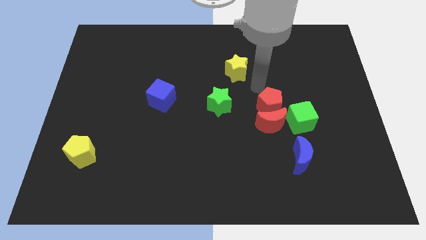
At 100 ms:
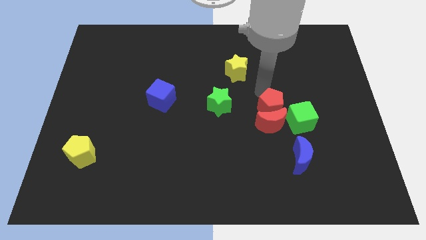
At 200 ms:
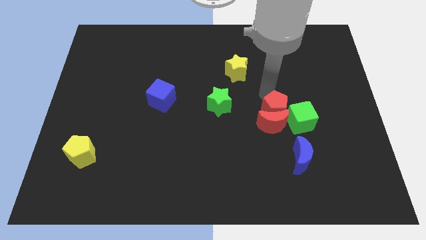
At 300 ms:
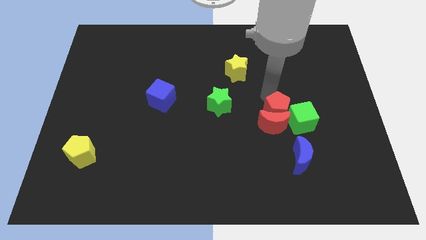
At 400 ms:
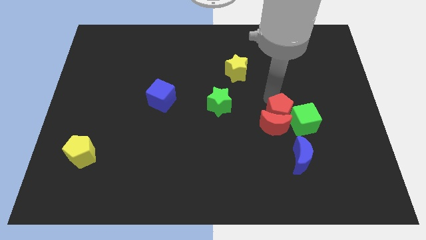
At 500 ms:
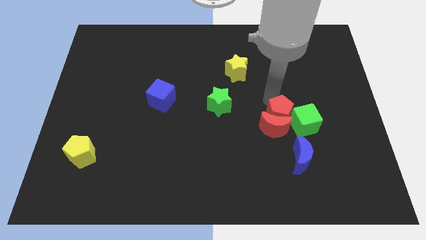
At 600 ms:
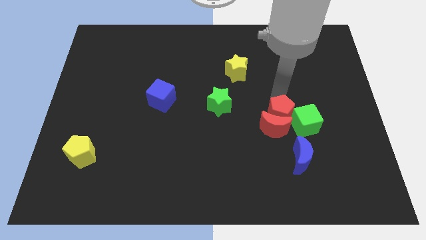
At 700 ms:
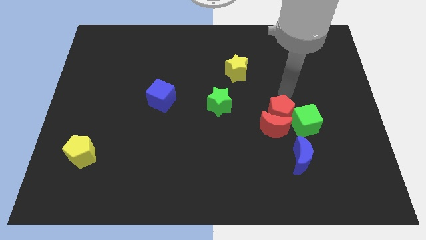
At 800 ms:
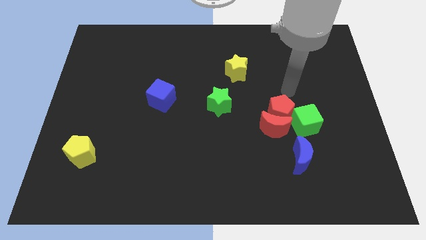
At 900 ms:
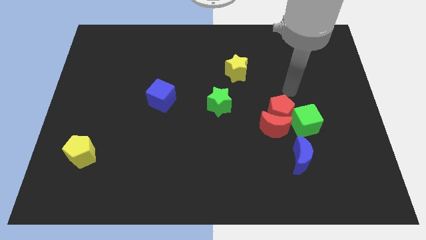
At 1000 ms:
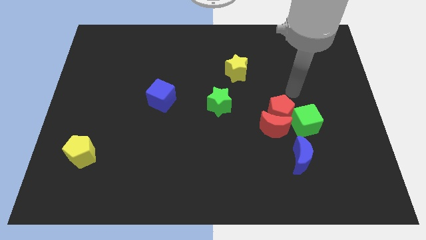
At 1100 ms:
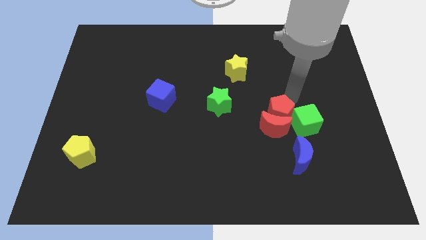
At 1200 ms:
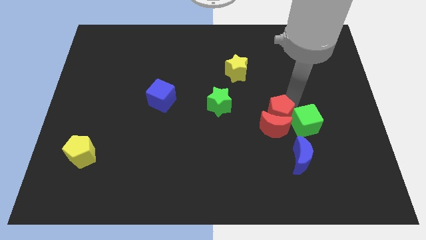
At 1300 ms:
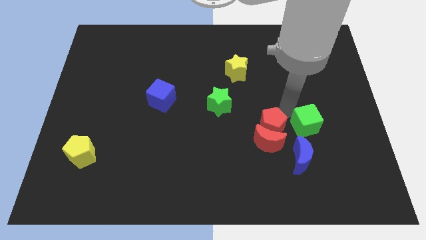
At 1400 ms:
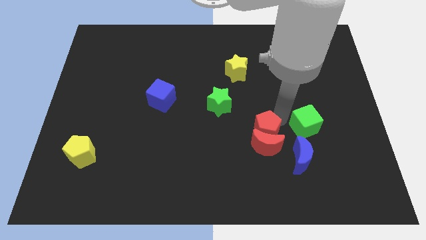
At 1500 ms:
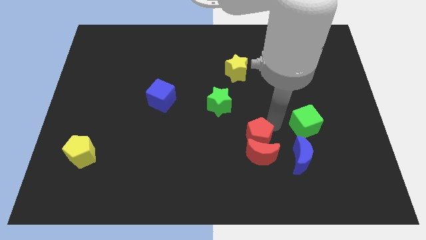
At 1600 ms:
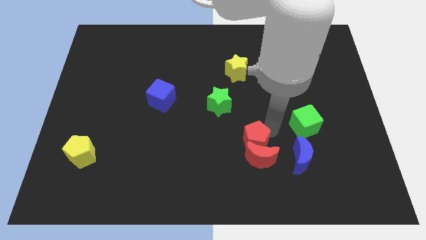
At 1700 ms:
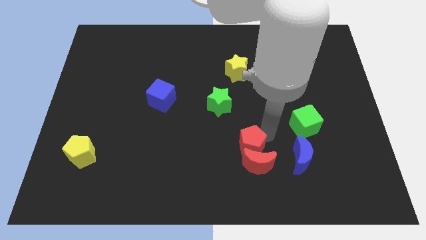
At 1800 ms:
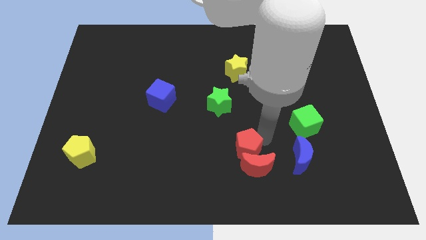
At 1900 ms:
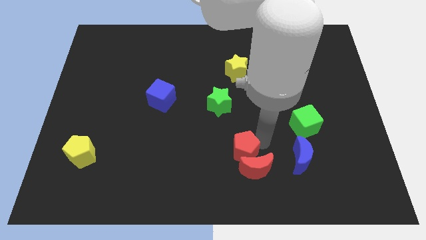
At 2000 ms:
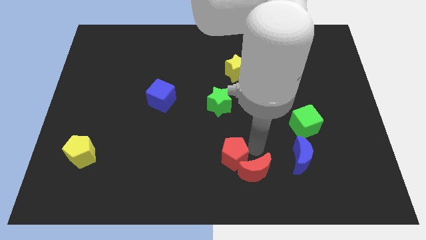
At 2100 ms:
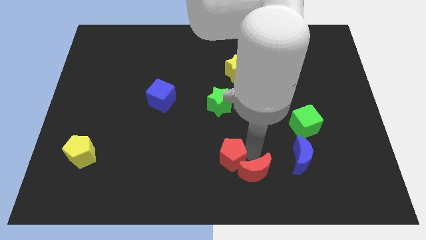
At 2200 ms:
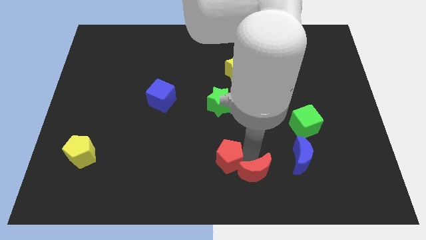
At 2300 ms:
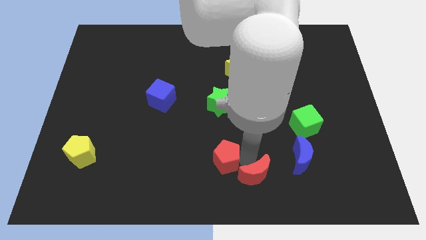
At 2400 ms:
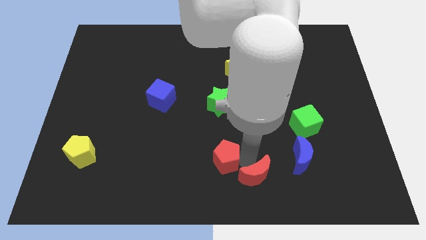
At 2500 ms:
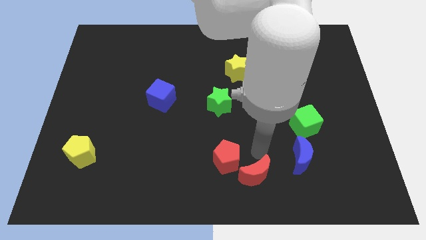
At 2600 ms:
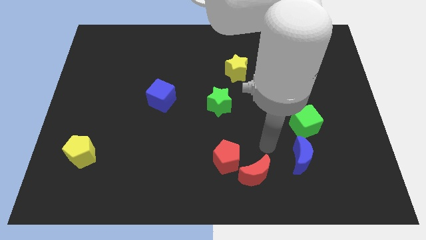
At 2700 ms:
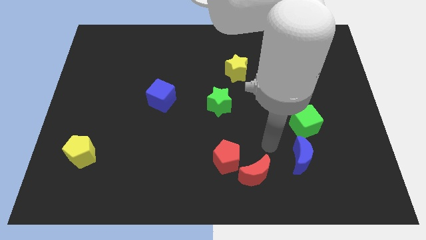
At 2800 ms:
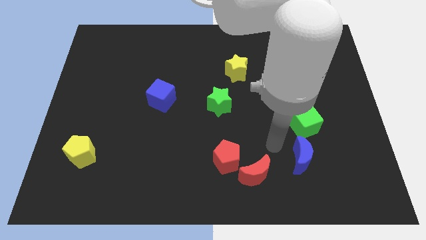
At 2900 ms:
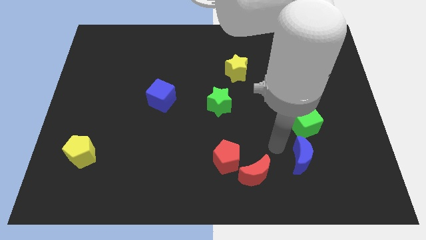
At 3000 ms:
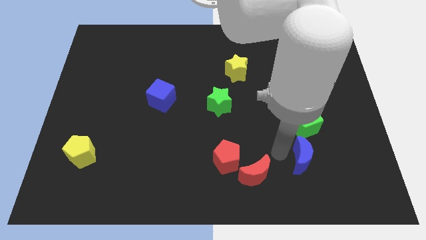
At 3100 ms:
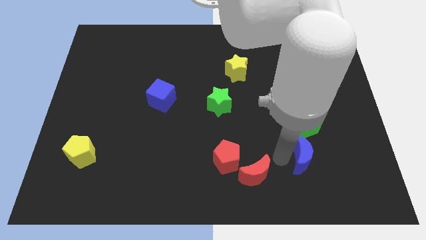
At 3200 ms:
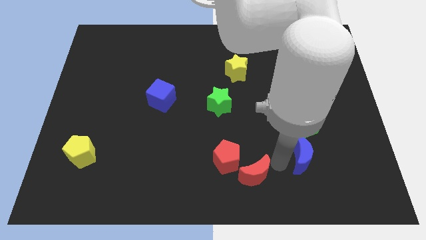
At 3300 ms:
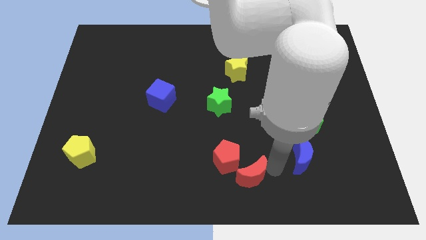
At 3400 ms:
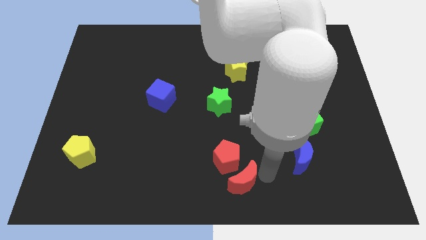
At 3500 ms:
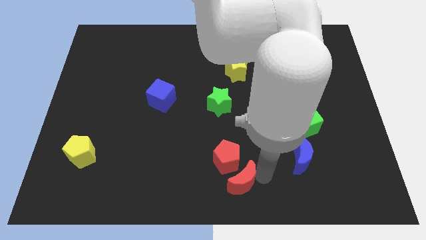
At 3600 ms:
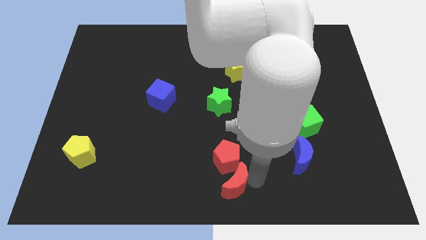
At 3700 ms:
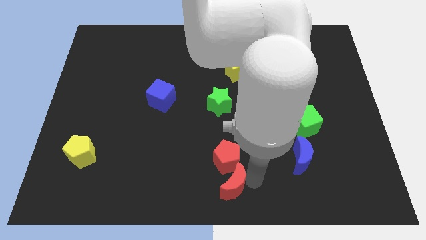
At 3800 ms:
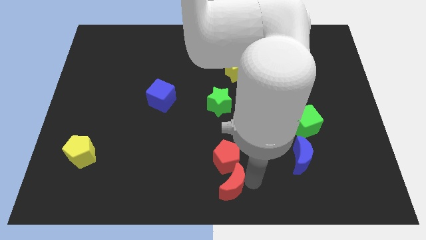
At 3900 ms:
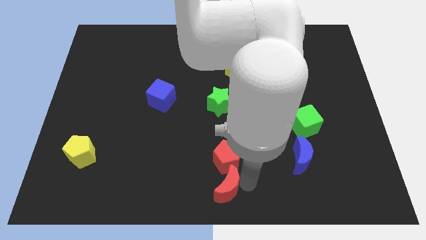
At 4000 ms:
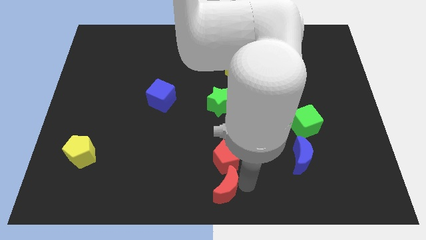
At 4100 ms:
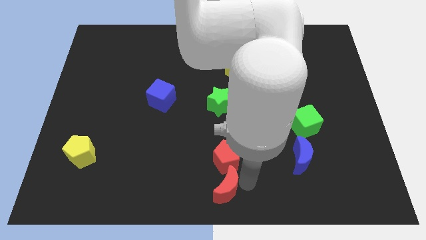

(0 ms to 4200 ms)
move the red blocks to the bottom center of the board

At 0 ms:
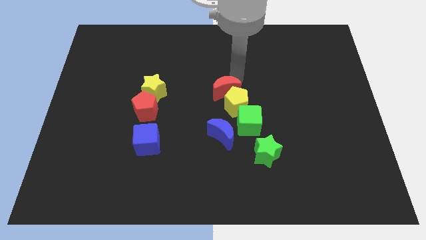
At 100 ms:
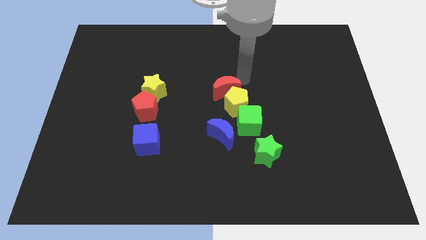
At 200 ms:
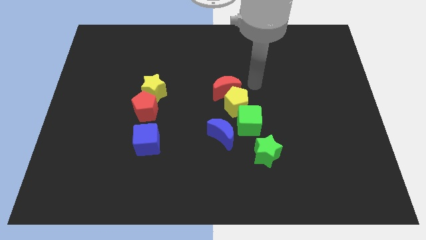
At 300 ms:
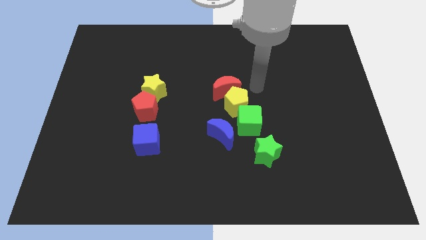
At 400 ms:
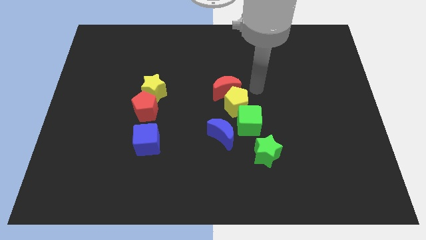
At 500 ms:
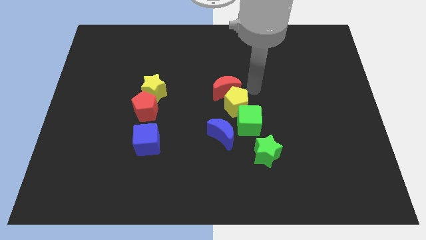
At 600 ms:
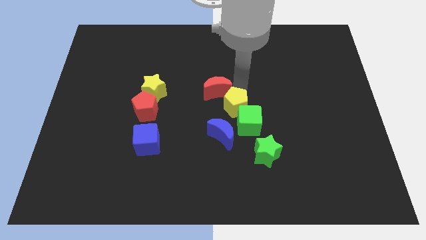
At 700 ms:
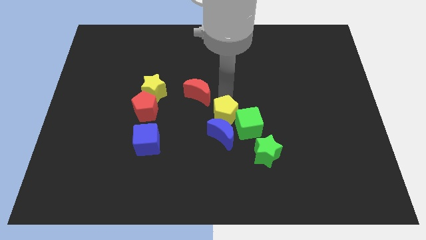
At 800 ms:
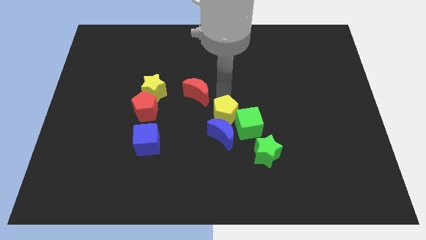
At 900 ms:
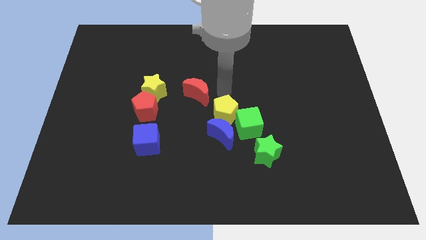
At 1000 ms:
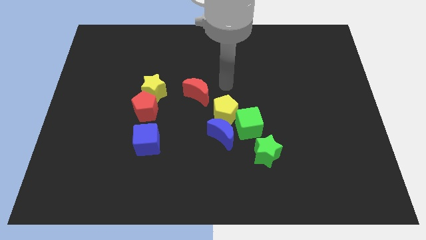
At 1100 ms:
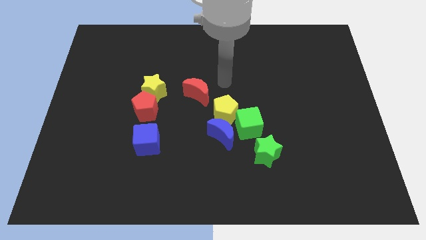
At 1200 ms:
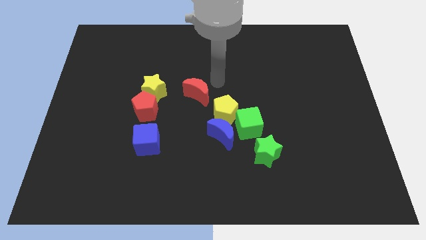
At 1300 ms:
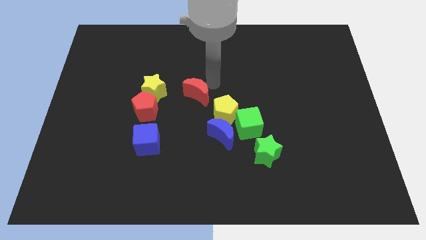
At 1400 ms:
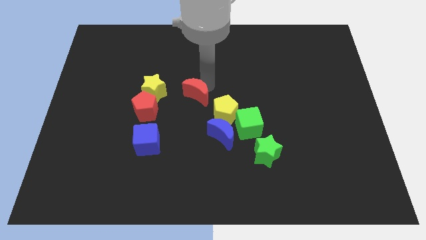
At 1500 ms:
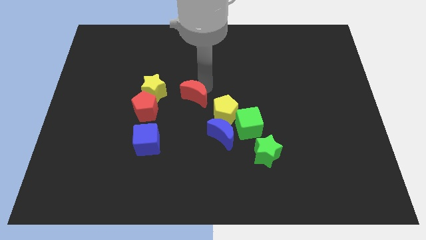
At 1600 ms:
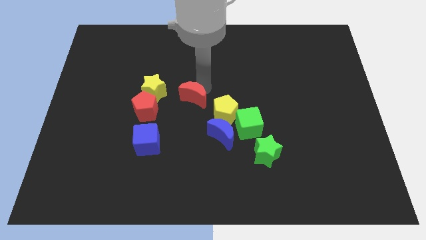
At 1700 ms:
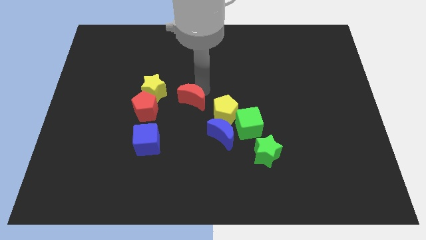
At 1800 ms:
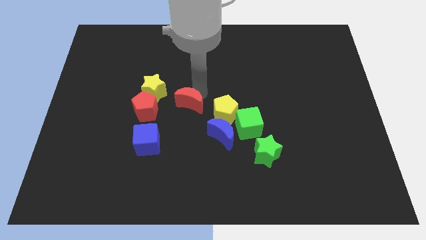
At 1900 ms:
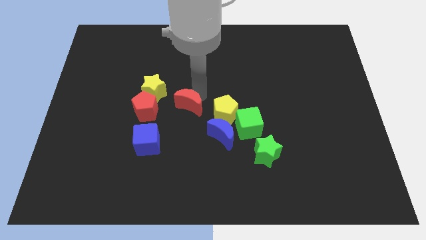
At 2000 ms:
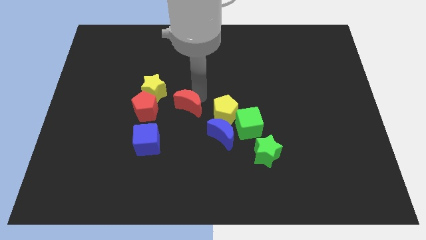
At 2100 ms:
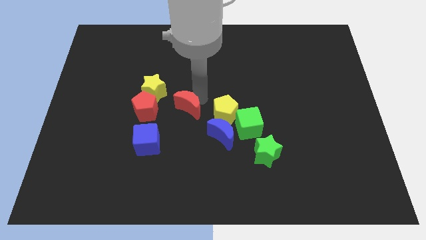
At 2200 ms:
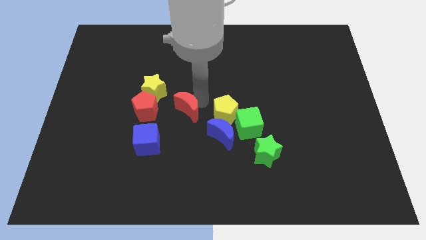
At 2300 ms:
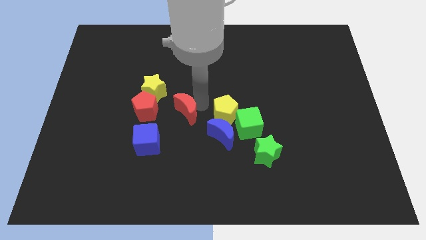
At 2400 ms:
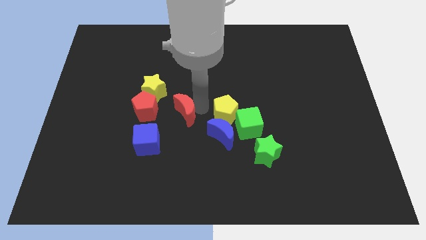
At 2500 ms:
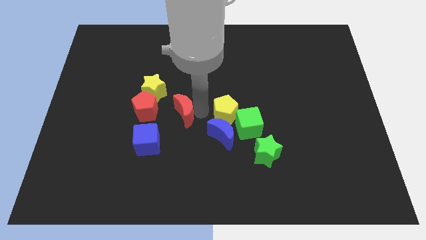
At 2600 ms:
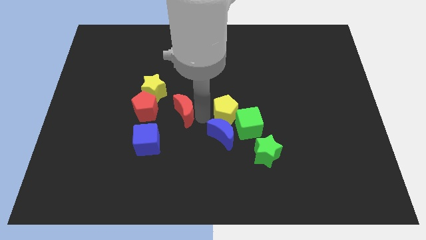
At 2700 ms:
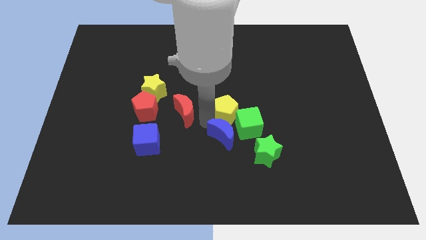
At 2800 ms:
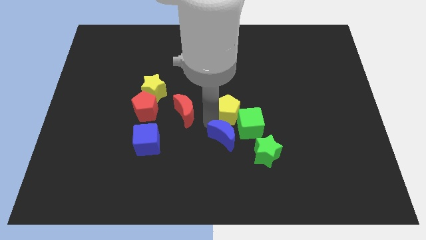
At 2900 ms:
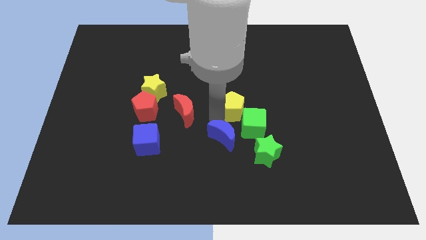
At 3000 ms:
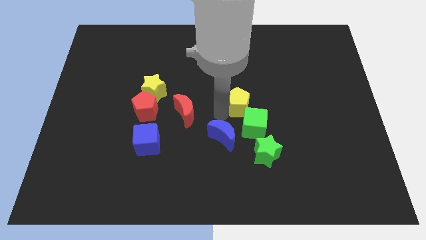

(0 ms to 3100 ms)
separate the red crescent and yellow pentagon

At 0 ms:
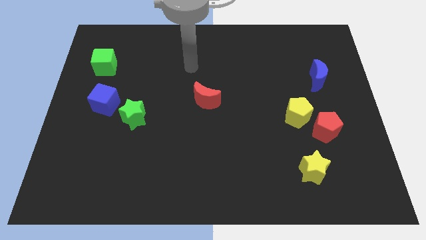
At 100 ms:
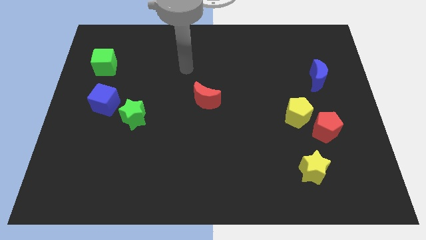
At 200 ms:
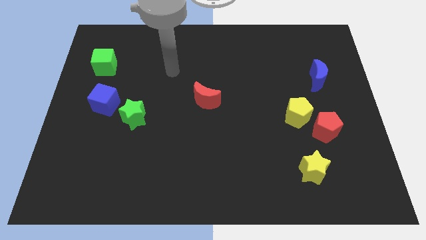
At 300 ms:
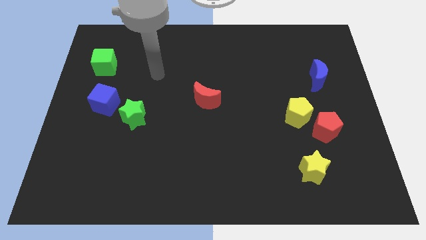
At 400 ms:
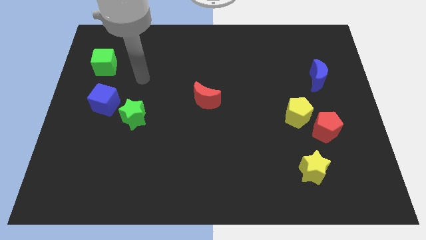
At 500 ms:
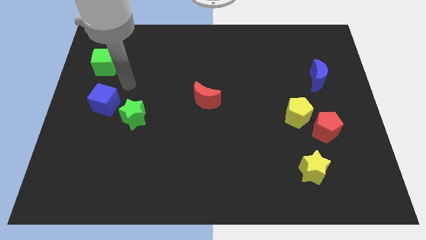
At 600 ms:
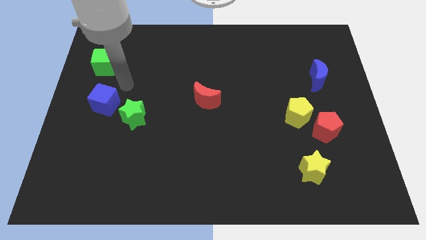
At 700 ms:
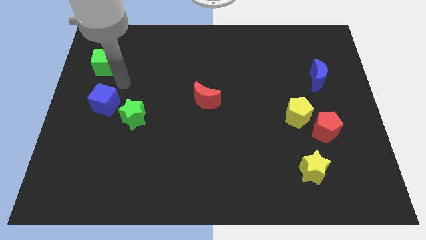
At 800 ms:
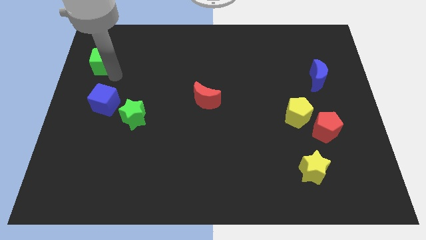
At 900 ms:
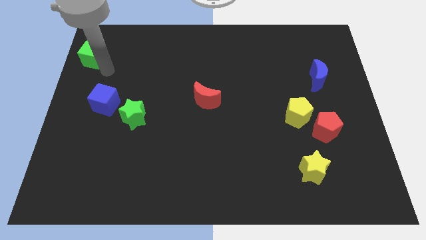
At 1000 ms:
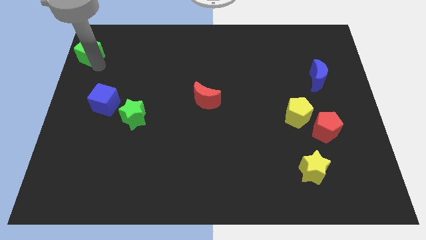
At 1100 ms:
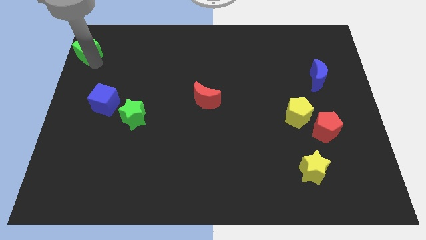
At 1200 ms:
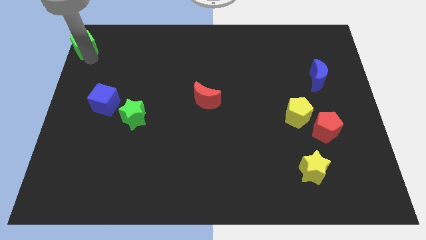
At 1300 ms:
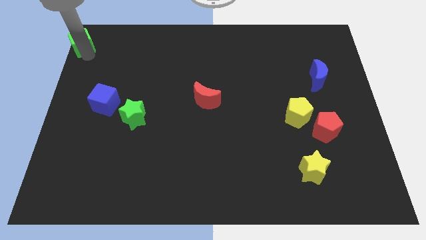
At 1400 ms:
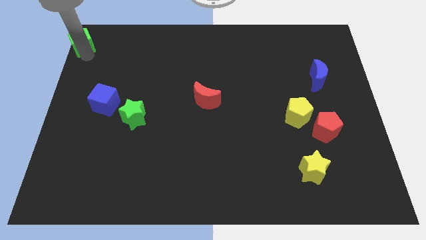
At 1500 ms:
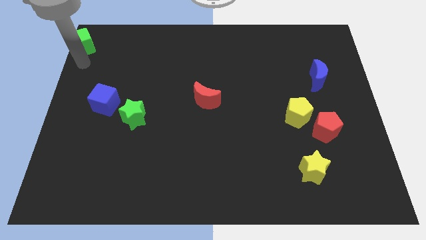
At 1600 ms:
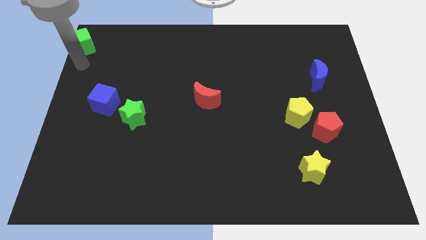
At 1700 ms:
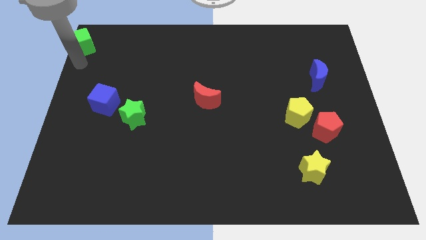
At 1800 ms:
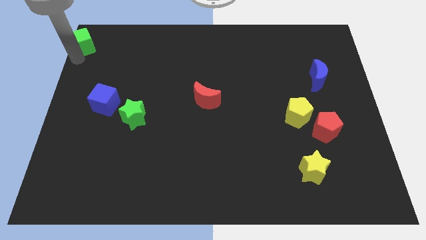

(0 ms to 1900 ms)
push the green cube to the top left side
